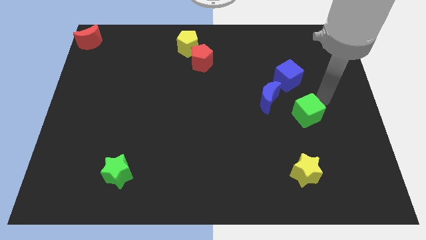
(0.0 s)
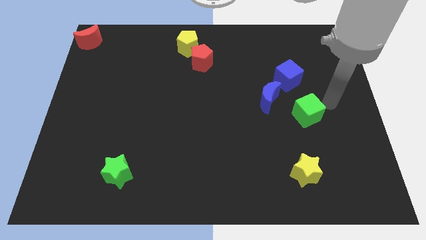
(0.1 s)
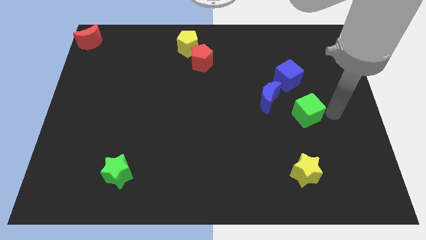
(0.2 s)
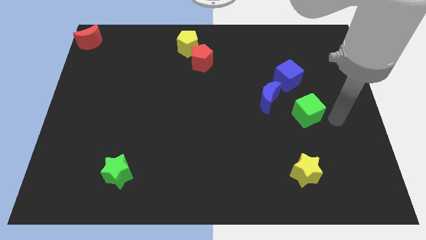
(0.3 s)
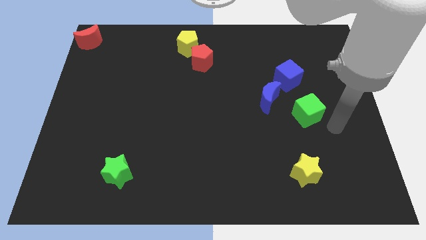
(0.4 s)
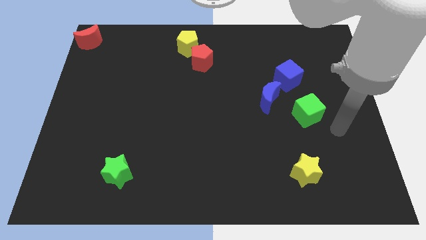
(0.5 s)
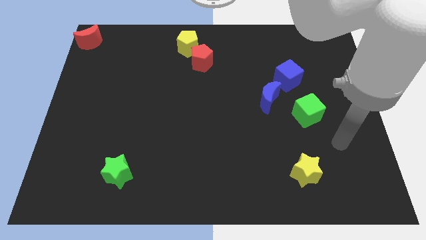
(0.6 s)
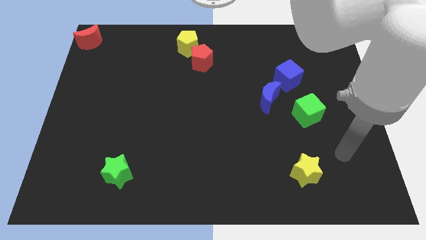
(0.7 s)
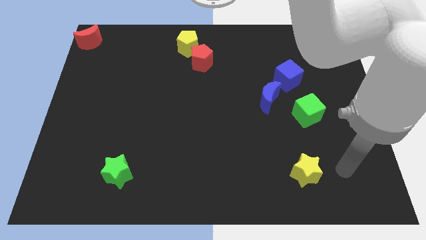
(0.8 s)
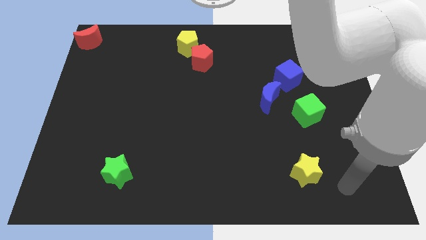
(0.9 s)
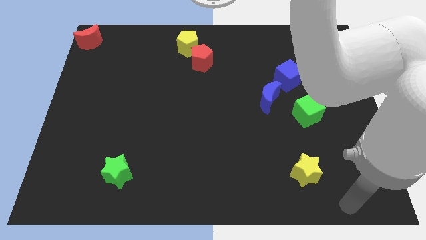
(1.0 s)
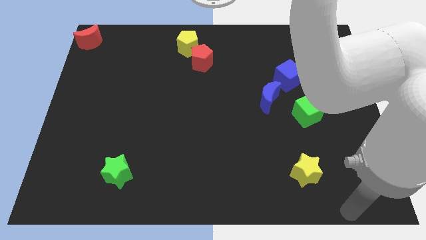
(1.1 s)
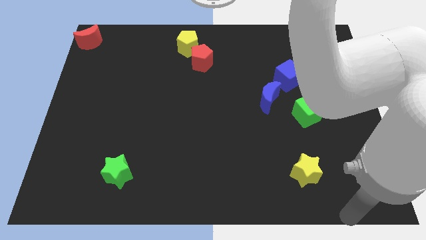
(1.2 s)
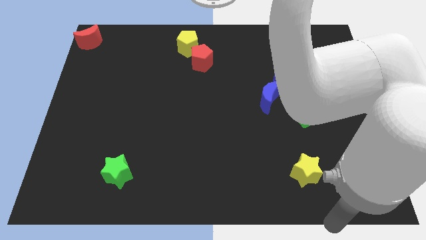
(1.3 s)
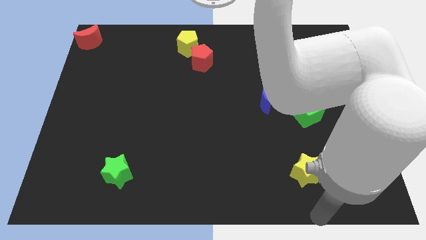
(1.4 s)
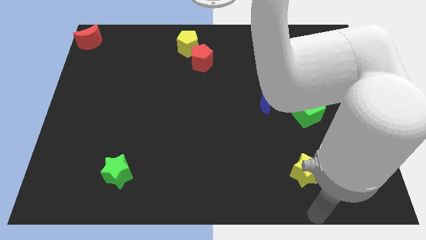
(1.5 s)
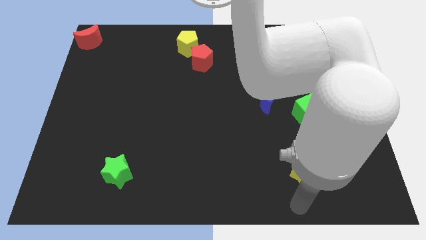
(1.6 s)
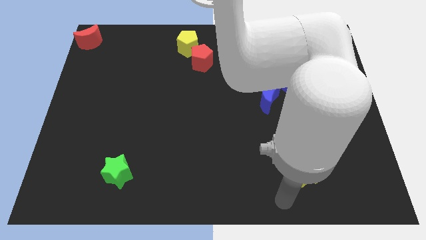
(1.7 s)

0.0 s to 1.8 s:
point the arm below the yellow star

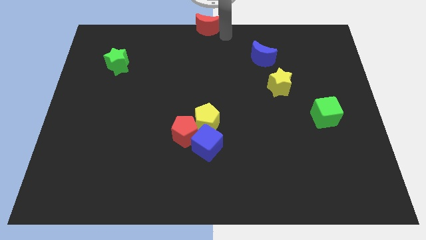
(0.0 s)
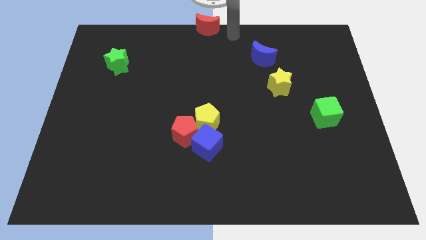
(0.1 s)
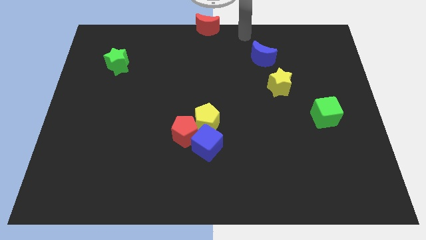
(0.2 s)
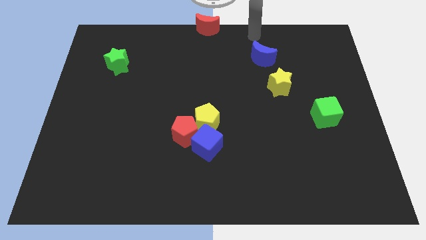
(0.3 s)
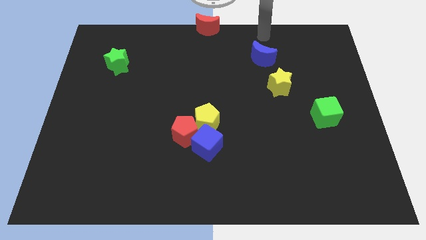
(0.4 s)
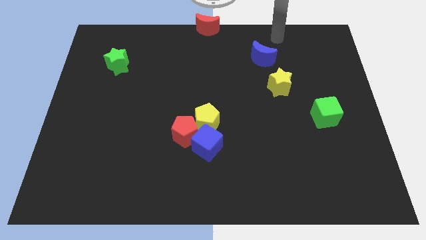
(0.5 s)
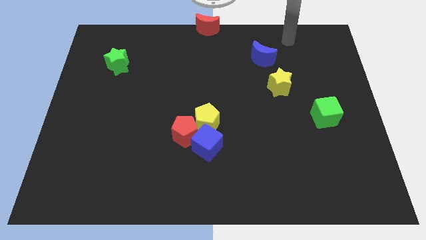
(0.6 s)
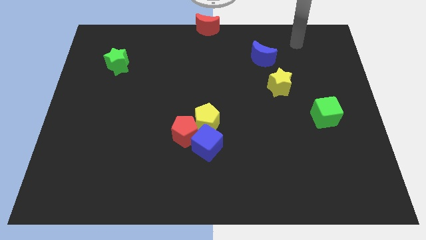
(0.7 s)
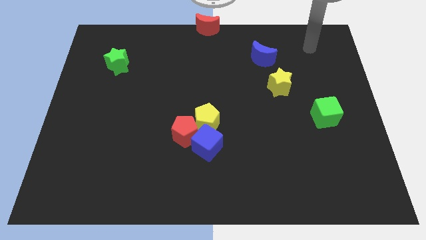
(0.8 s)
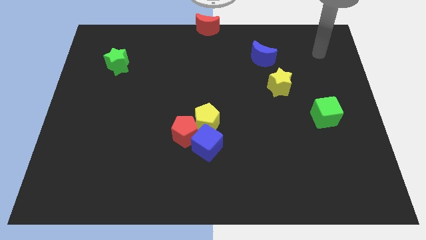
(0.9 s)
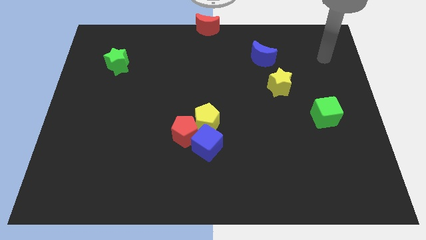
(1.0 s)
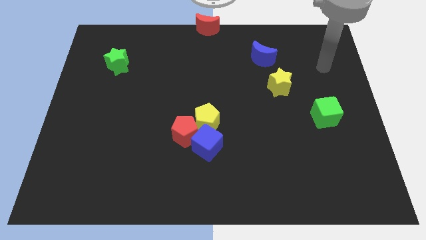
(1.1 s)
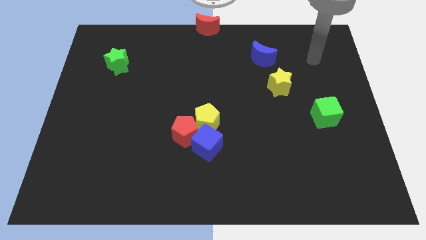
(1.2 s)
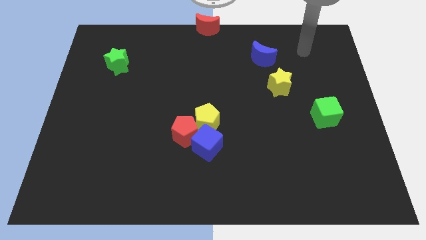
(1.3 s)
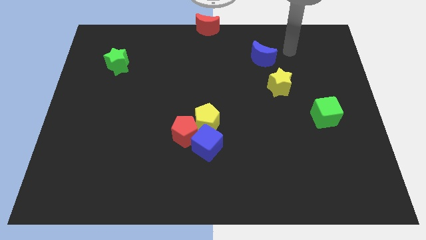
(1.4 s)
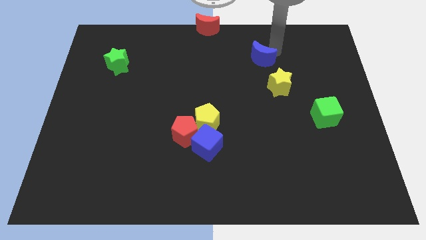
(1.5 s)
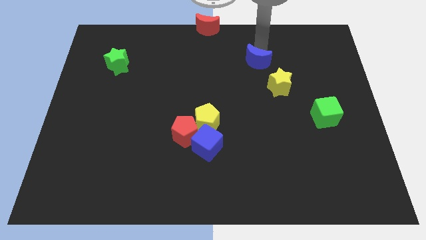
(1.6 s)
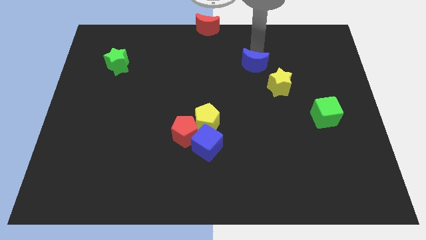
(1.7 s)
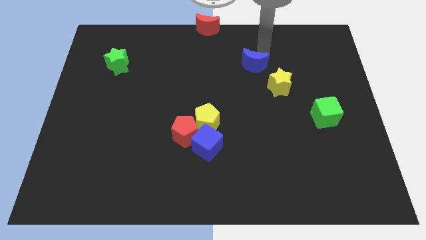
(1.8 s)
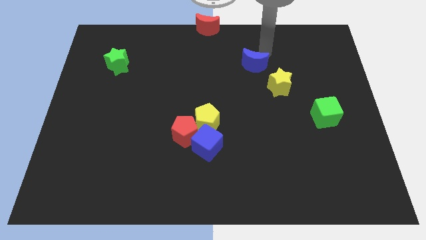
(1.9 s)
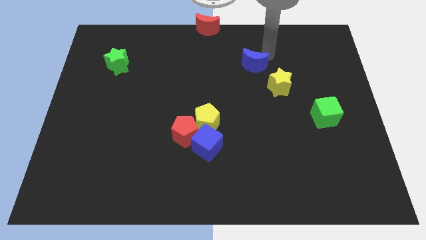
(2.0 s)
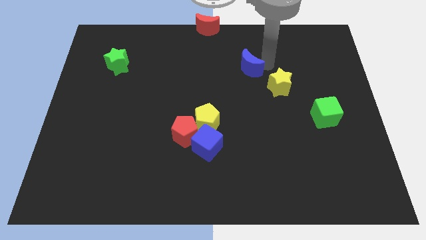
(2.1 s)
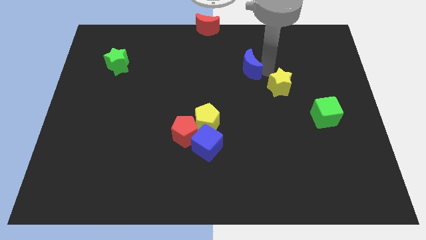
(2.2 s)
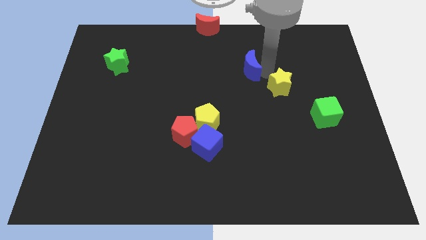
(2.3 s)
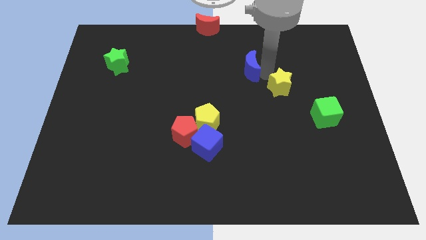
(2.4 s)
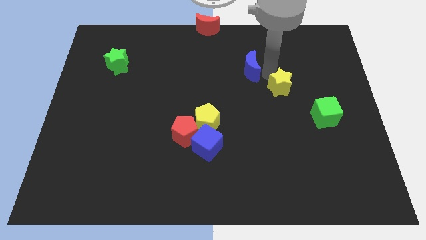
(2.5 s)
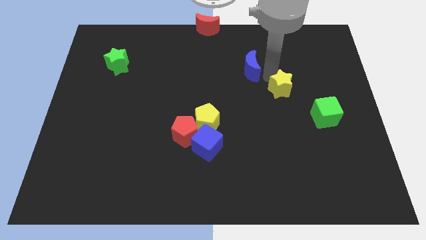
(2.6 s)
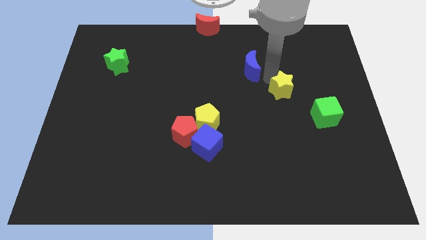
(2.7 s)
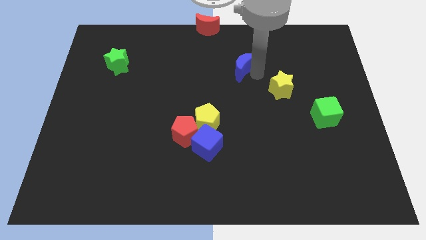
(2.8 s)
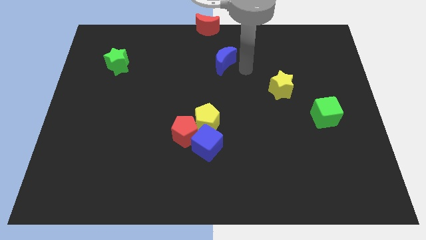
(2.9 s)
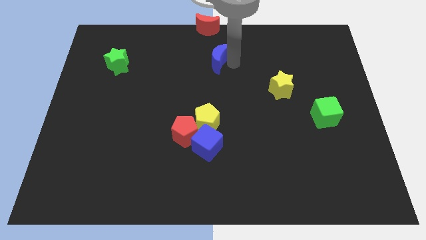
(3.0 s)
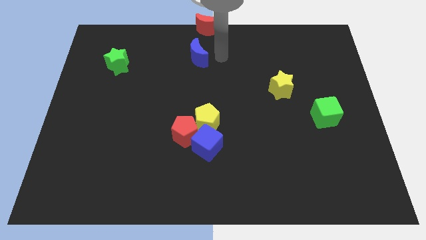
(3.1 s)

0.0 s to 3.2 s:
move blue crescent below the red crescent

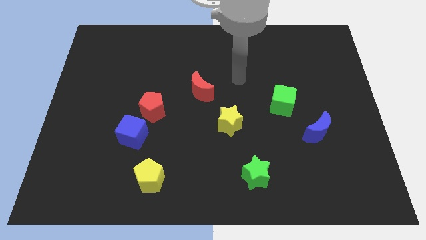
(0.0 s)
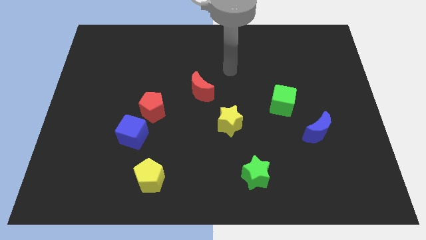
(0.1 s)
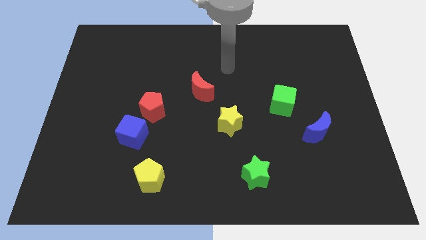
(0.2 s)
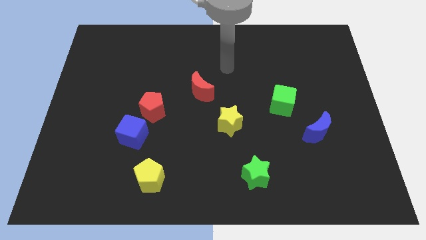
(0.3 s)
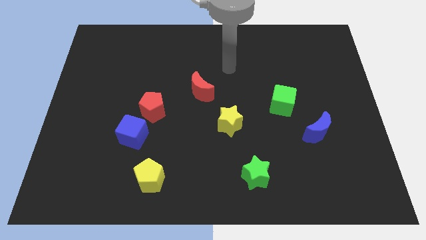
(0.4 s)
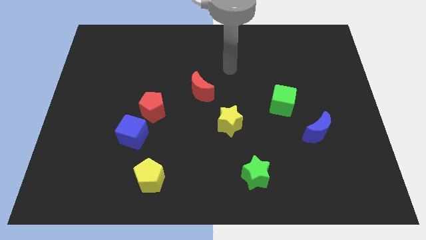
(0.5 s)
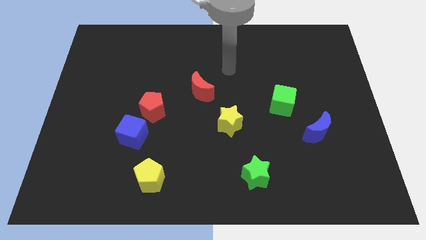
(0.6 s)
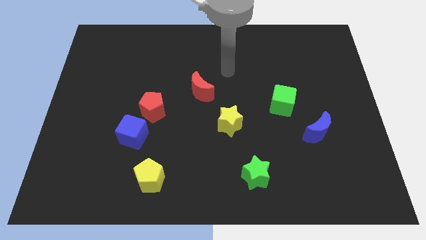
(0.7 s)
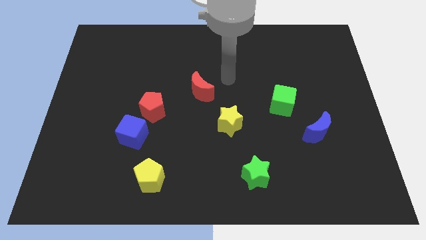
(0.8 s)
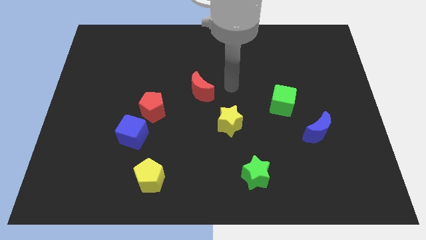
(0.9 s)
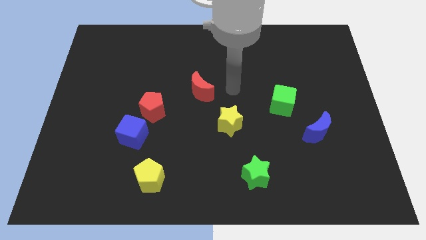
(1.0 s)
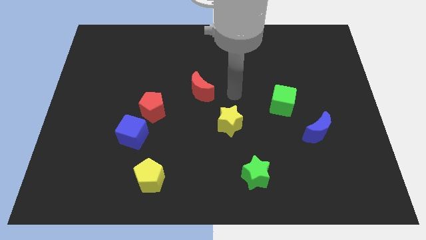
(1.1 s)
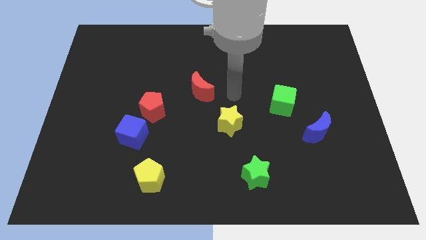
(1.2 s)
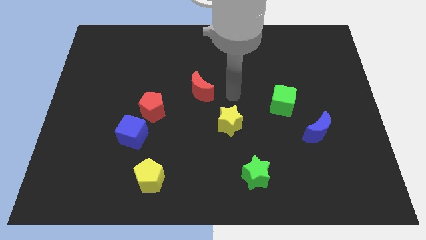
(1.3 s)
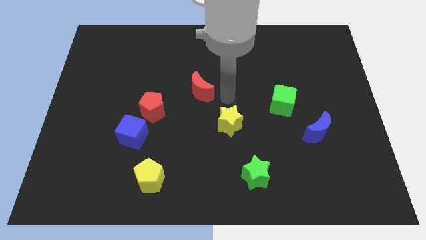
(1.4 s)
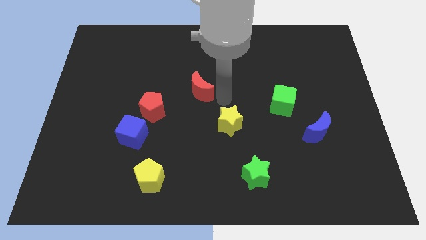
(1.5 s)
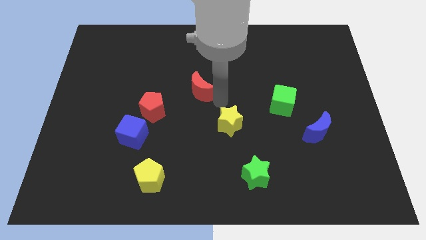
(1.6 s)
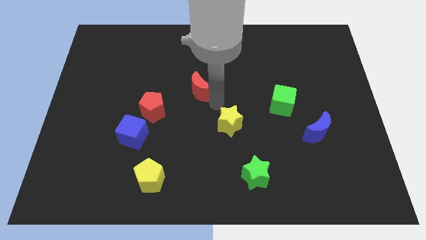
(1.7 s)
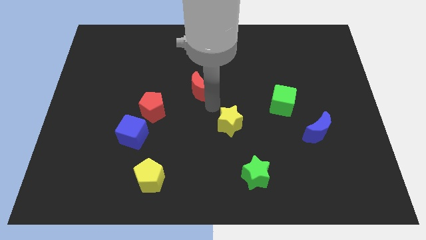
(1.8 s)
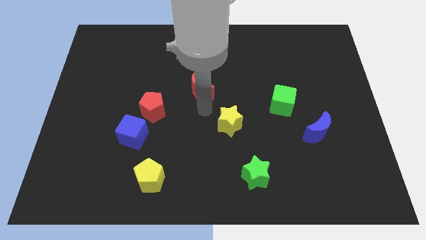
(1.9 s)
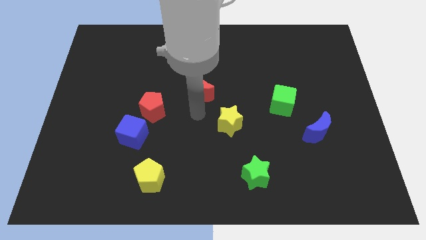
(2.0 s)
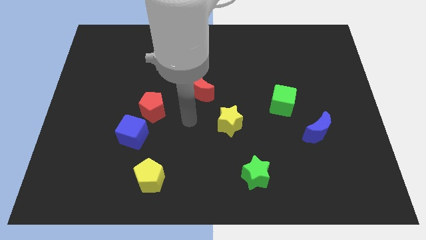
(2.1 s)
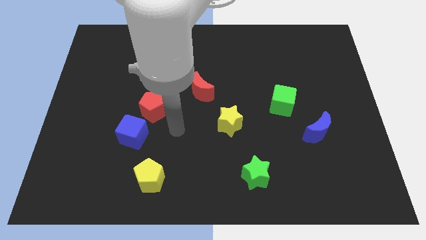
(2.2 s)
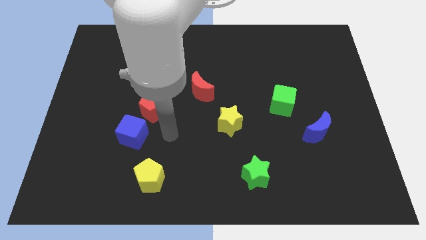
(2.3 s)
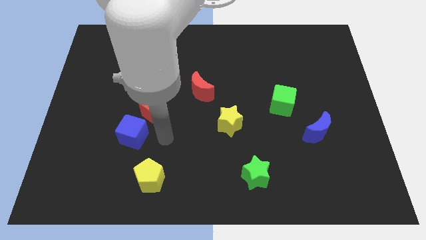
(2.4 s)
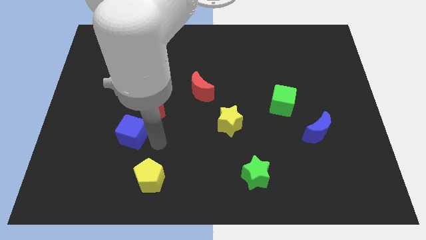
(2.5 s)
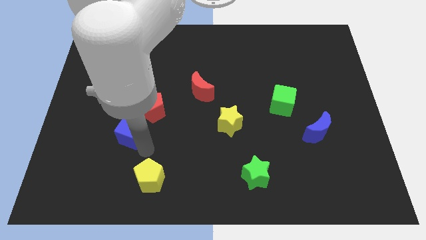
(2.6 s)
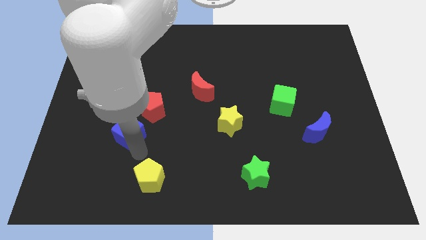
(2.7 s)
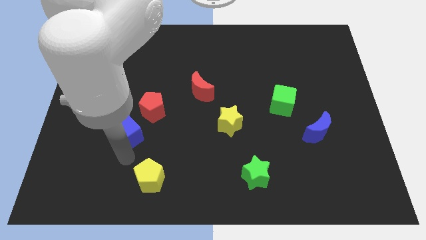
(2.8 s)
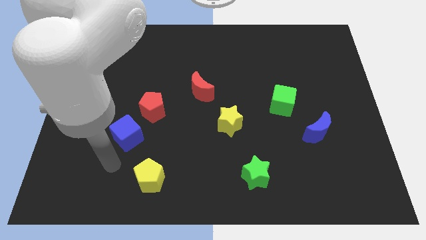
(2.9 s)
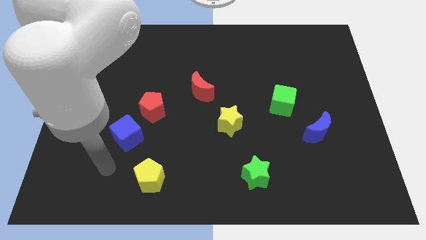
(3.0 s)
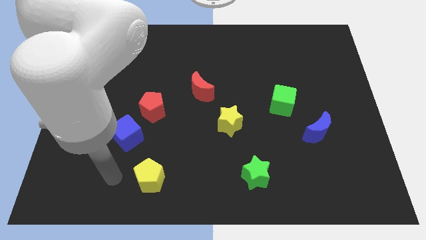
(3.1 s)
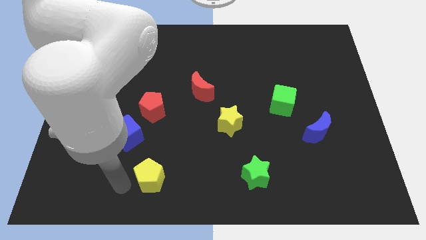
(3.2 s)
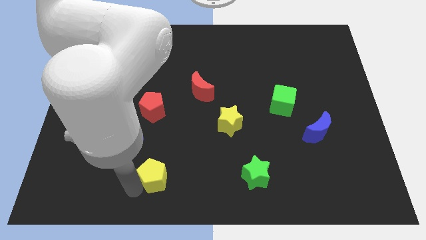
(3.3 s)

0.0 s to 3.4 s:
place the arm left to the yellow pentagon

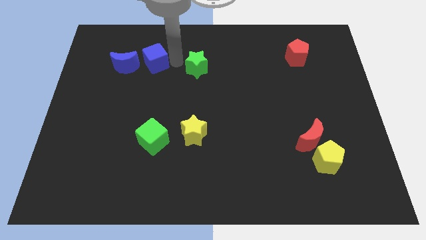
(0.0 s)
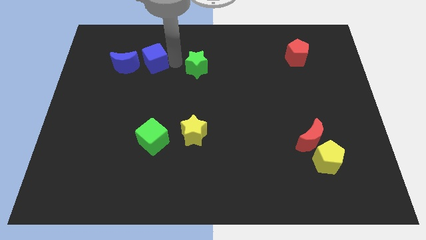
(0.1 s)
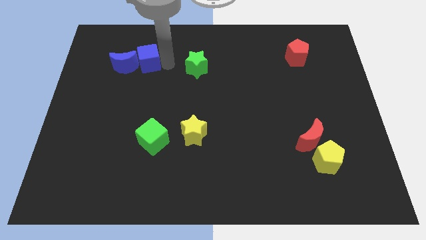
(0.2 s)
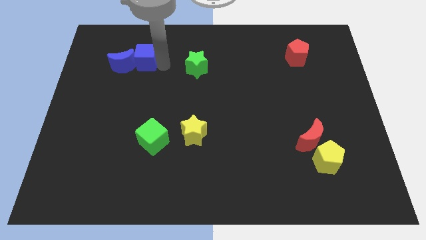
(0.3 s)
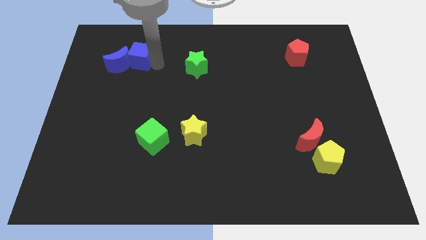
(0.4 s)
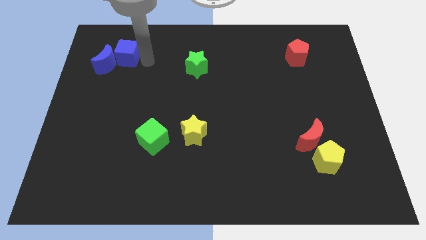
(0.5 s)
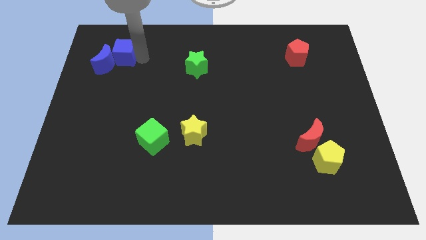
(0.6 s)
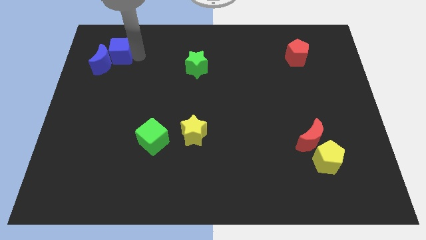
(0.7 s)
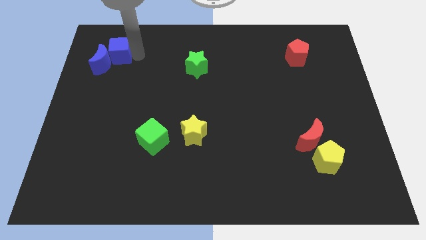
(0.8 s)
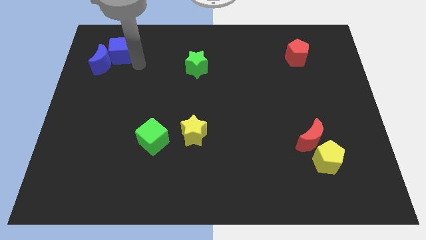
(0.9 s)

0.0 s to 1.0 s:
push the blue blocks towards the left side of the board
